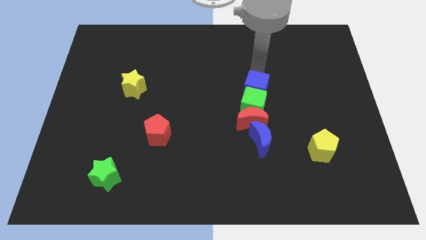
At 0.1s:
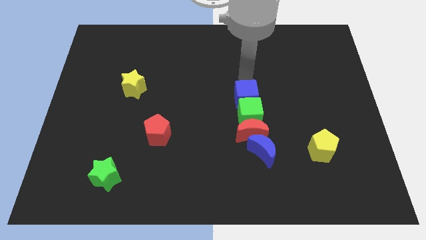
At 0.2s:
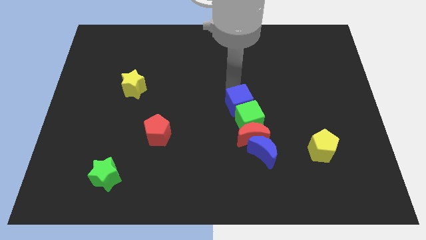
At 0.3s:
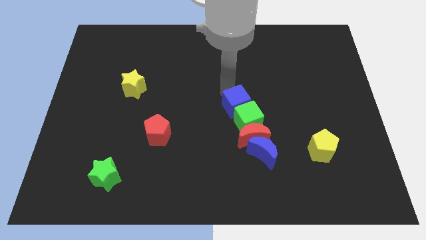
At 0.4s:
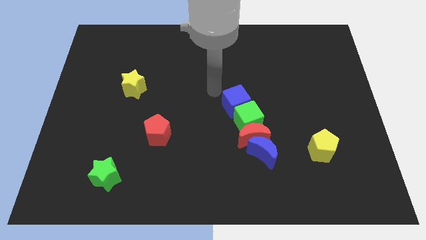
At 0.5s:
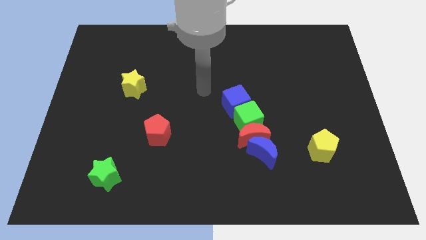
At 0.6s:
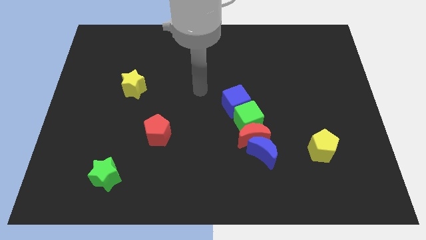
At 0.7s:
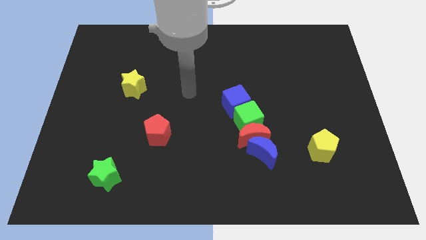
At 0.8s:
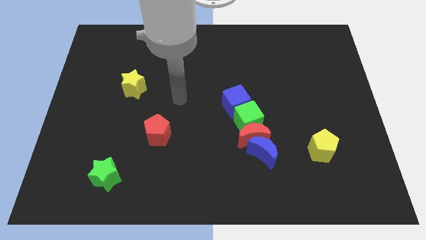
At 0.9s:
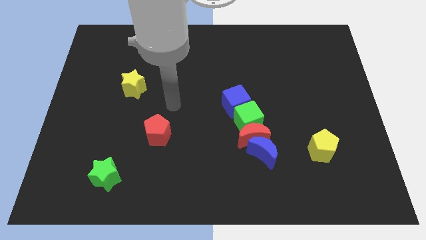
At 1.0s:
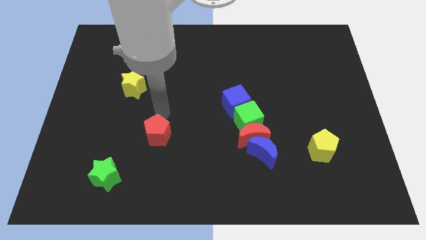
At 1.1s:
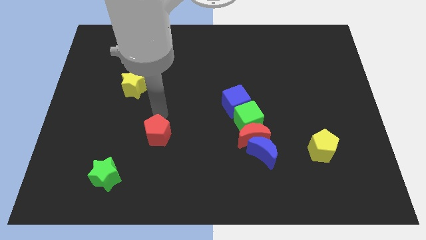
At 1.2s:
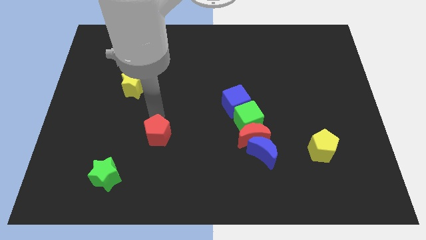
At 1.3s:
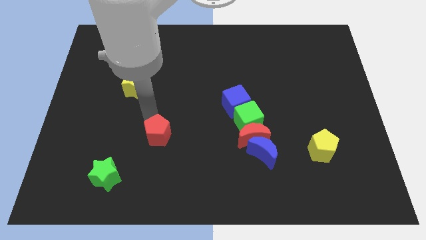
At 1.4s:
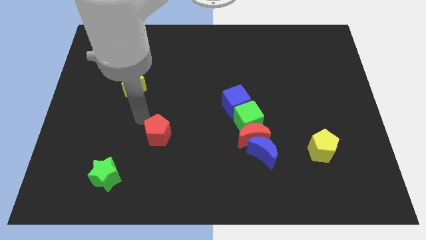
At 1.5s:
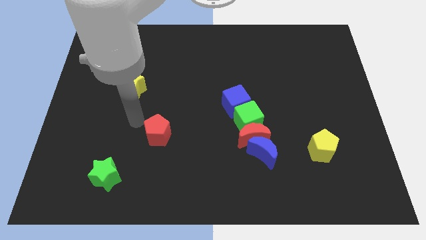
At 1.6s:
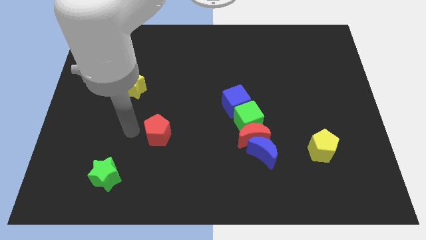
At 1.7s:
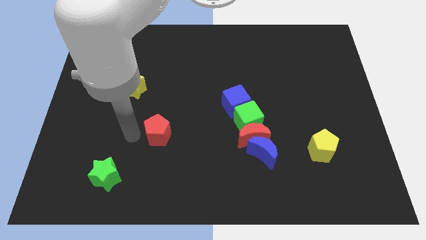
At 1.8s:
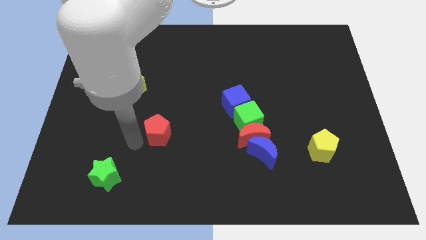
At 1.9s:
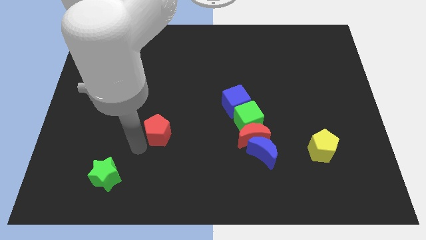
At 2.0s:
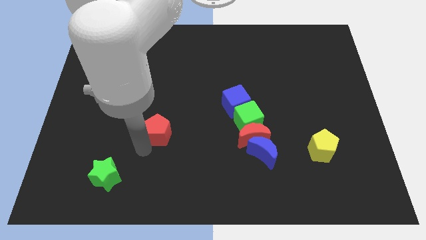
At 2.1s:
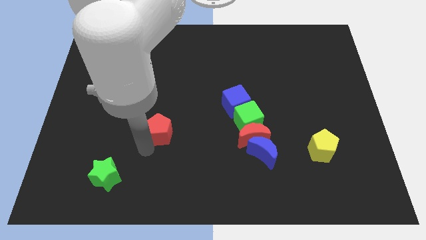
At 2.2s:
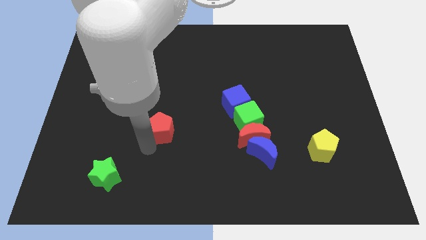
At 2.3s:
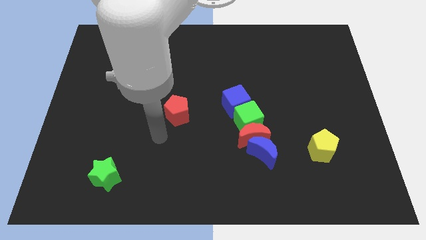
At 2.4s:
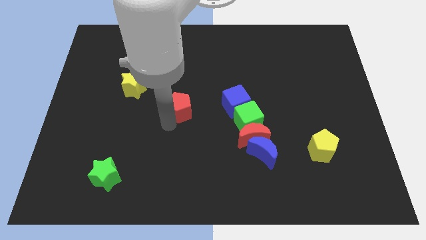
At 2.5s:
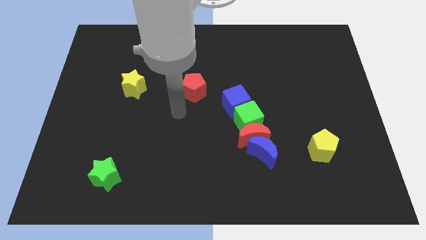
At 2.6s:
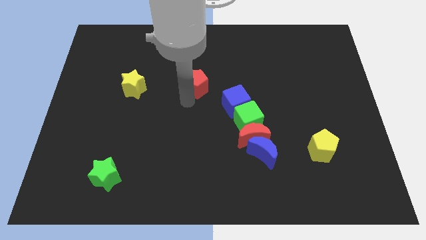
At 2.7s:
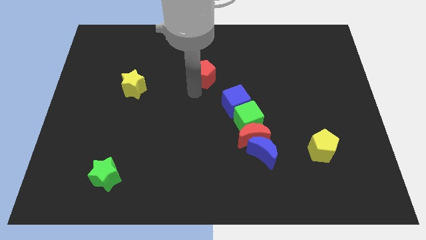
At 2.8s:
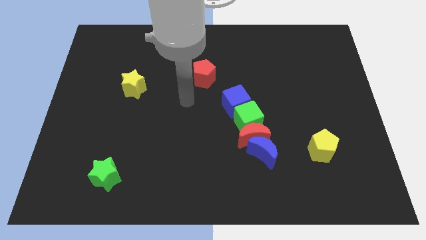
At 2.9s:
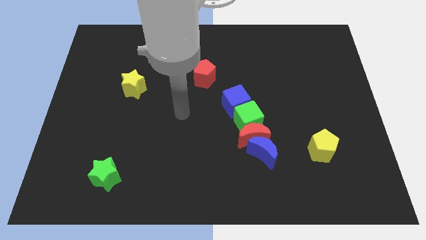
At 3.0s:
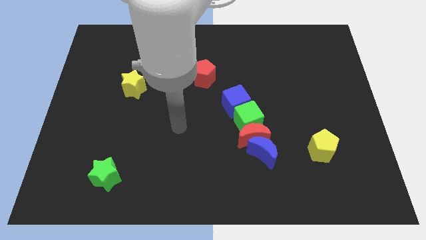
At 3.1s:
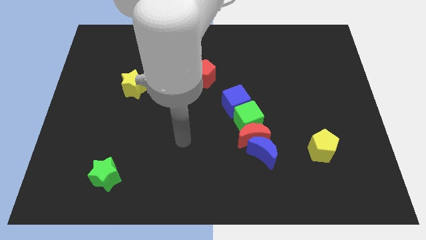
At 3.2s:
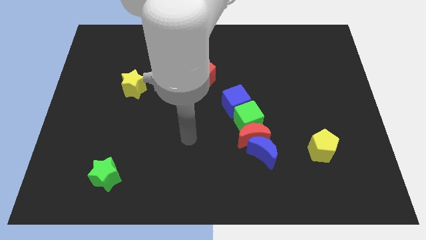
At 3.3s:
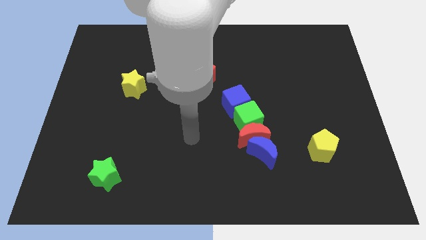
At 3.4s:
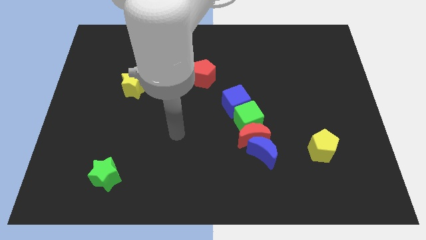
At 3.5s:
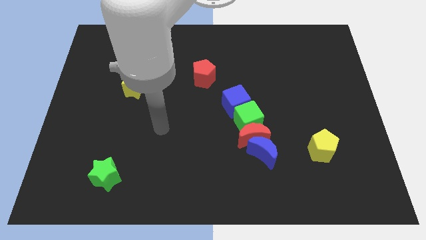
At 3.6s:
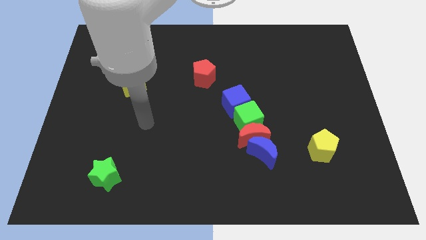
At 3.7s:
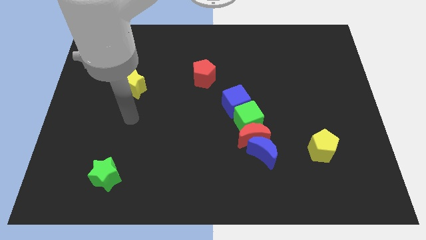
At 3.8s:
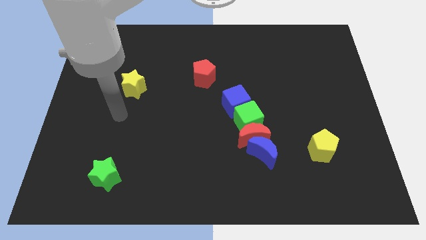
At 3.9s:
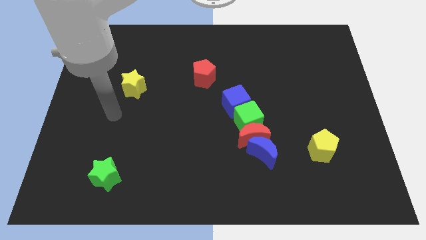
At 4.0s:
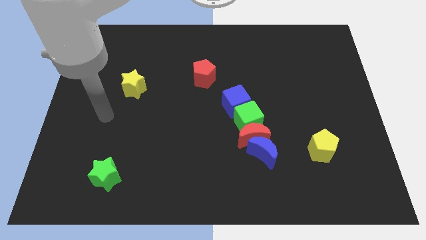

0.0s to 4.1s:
place the red pentgaon right to the yellow star

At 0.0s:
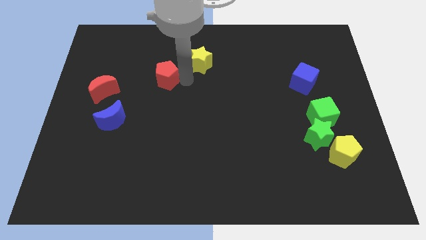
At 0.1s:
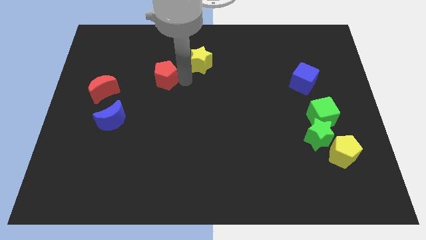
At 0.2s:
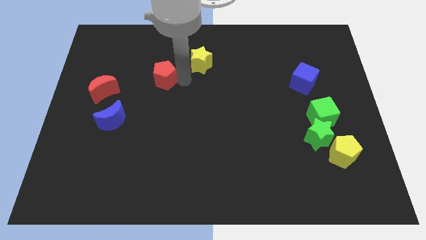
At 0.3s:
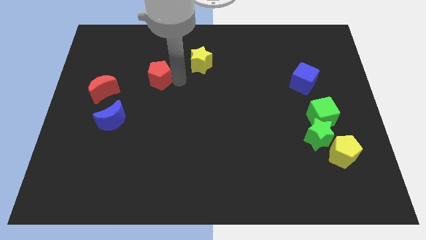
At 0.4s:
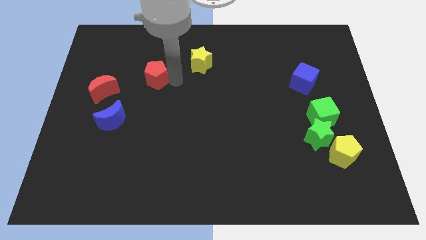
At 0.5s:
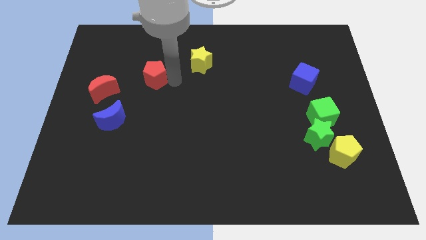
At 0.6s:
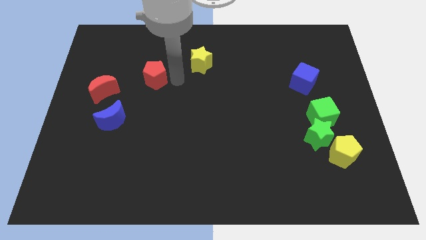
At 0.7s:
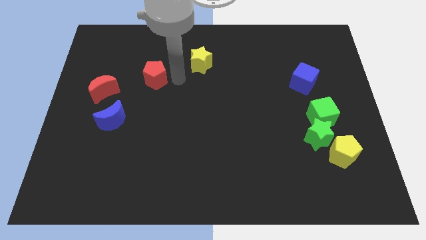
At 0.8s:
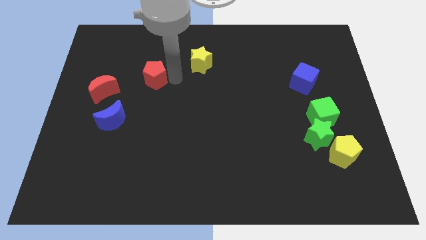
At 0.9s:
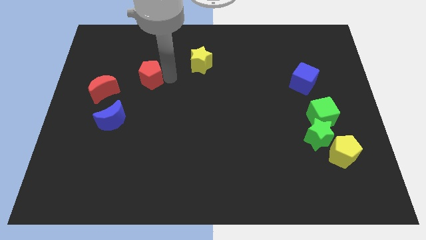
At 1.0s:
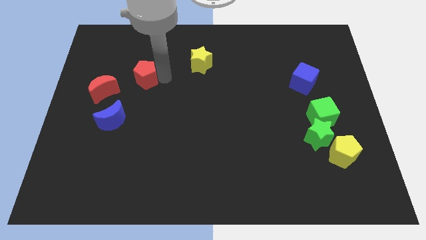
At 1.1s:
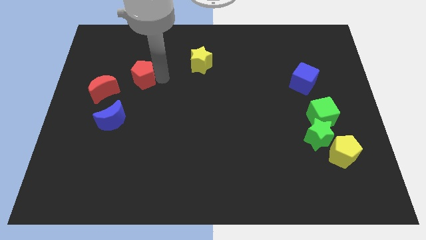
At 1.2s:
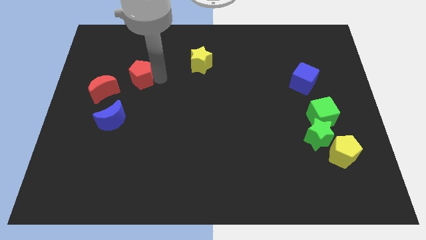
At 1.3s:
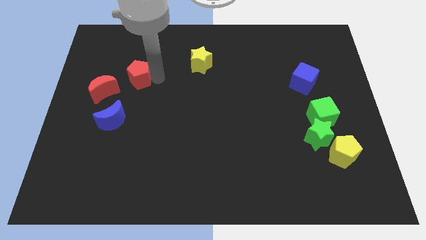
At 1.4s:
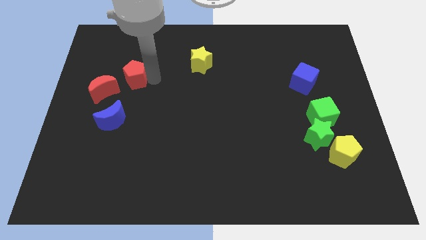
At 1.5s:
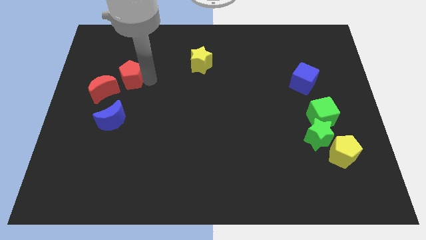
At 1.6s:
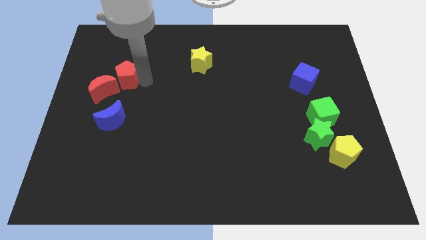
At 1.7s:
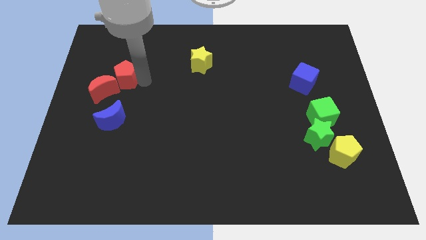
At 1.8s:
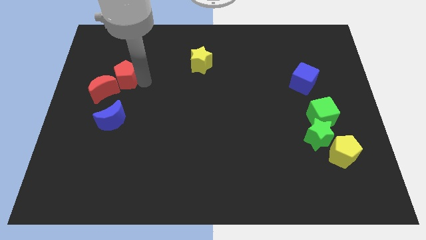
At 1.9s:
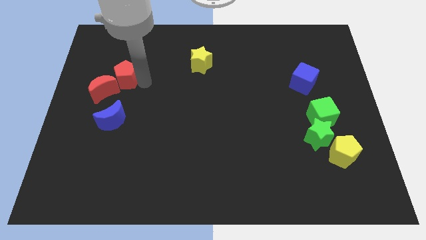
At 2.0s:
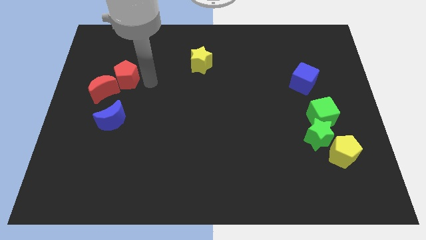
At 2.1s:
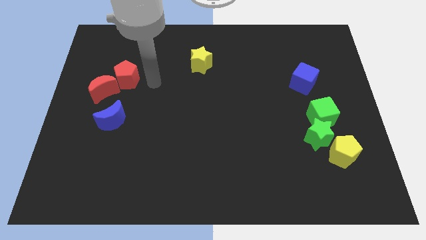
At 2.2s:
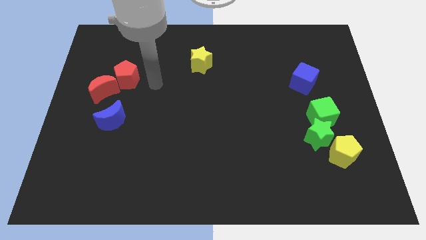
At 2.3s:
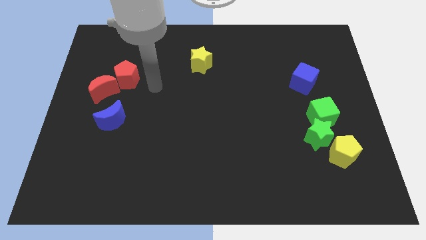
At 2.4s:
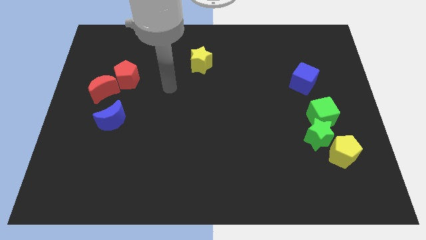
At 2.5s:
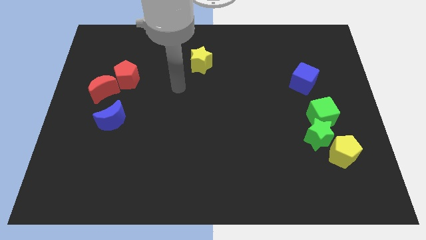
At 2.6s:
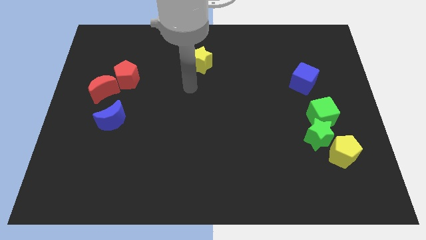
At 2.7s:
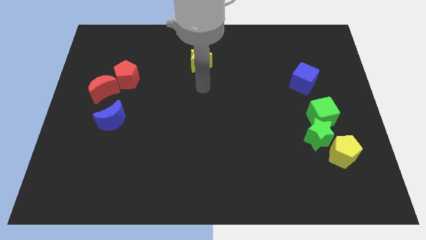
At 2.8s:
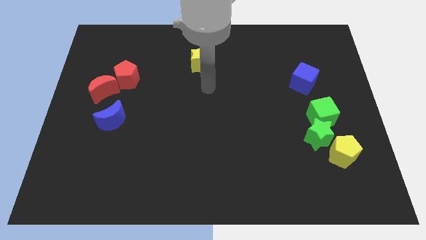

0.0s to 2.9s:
move red pentagon to the right of red moon

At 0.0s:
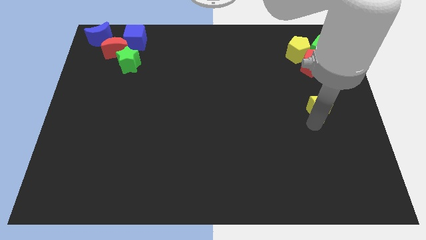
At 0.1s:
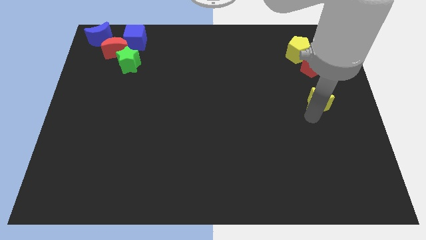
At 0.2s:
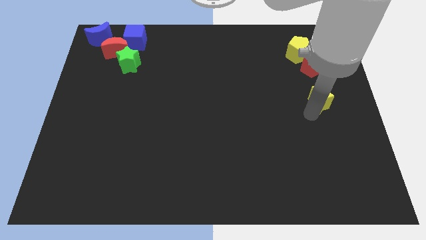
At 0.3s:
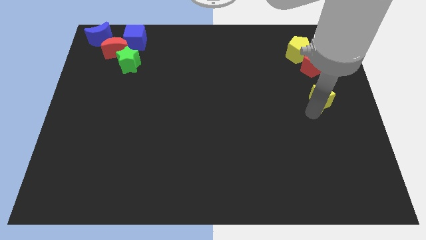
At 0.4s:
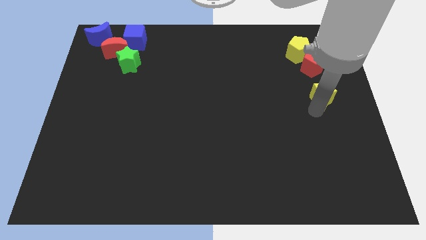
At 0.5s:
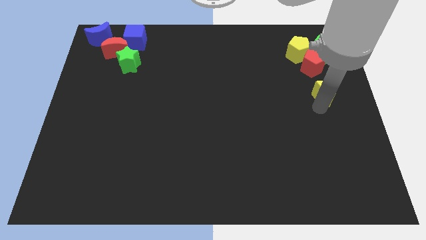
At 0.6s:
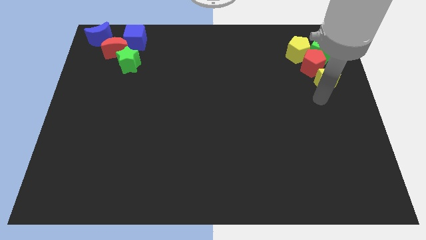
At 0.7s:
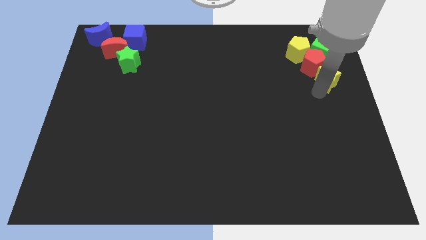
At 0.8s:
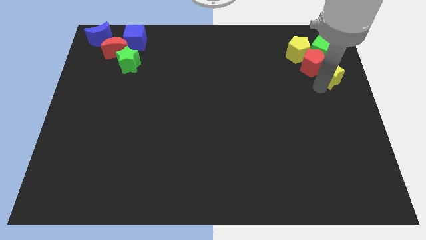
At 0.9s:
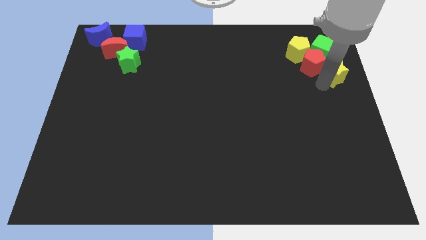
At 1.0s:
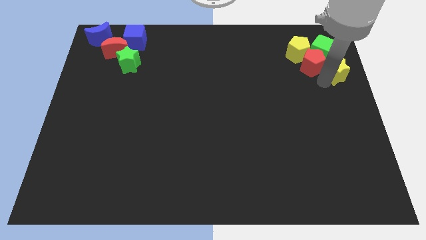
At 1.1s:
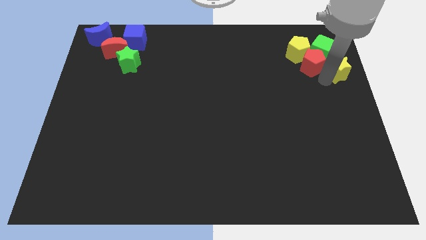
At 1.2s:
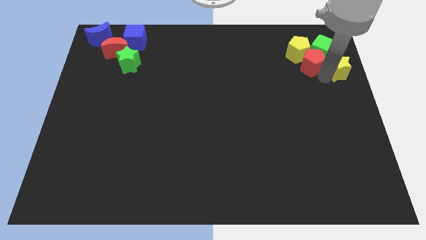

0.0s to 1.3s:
place yellow star below green cube

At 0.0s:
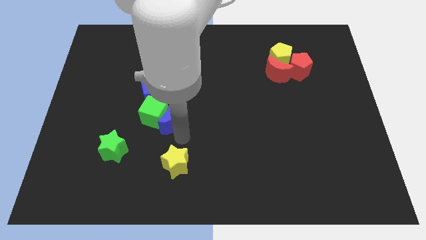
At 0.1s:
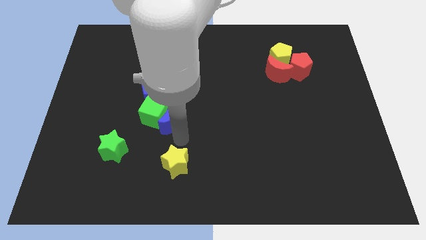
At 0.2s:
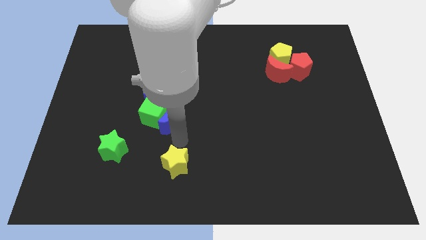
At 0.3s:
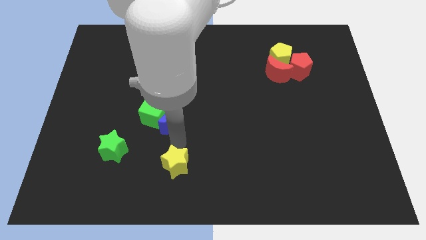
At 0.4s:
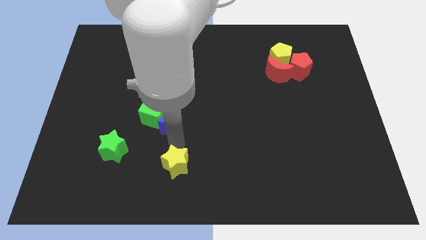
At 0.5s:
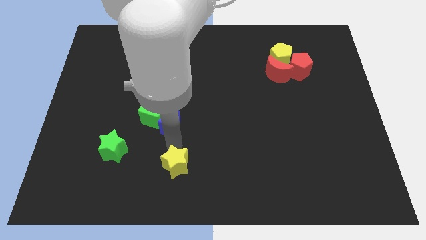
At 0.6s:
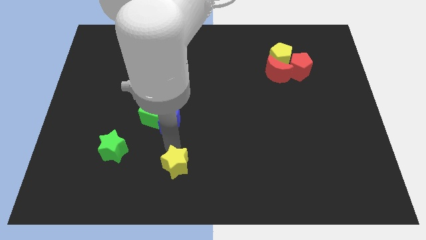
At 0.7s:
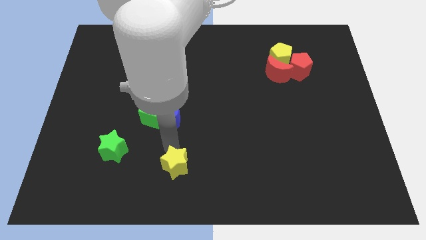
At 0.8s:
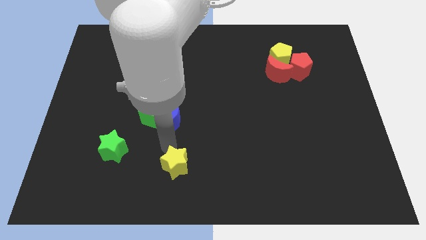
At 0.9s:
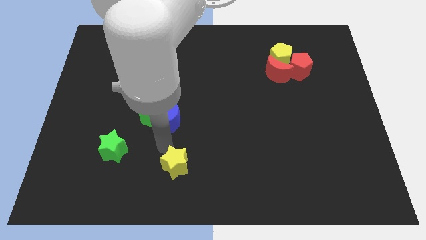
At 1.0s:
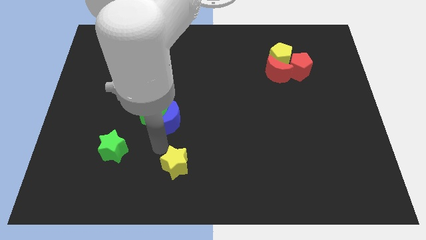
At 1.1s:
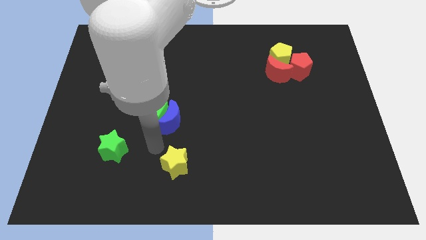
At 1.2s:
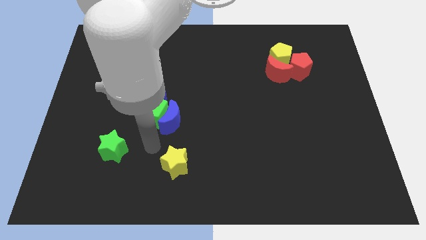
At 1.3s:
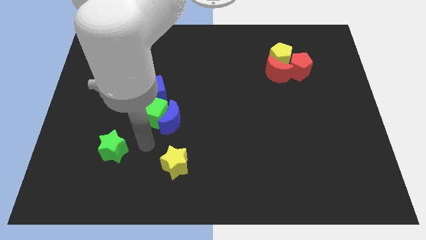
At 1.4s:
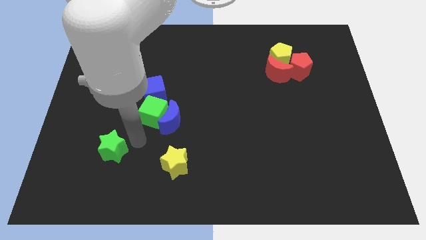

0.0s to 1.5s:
put your hand vertically below the green cube
